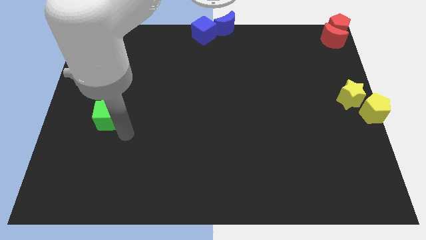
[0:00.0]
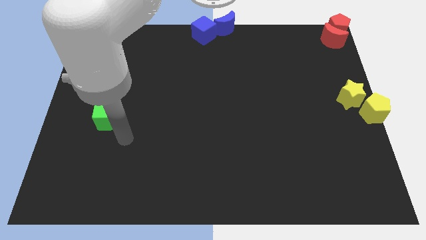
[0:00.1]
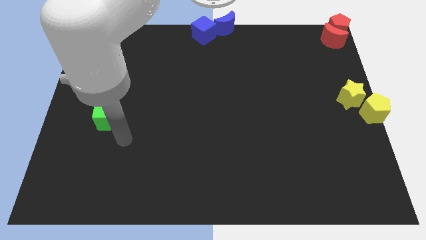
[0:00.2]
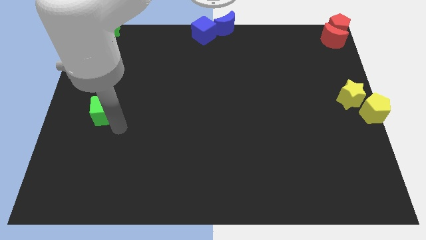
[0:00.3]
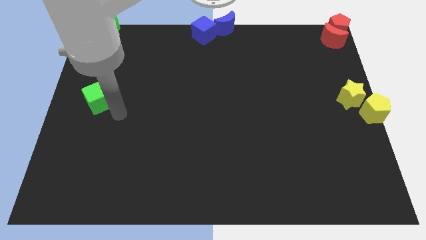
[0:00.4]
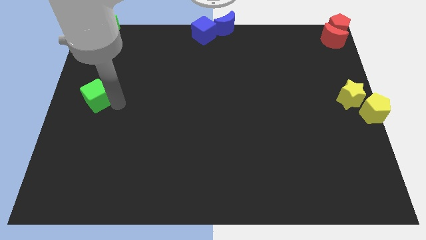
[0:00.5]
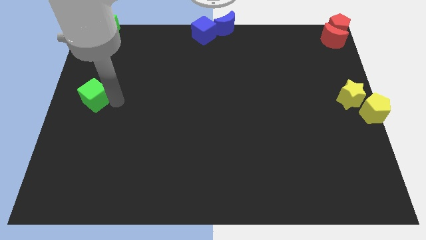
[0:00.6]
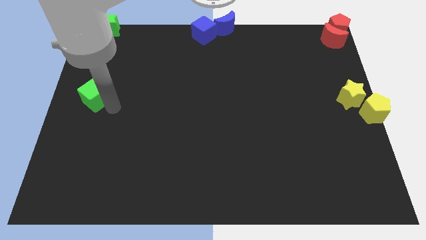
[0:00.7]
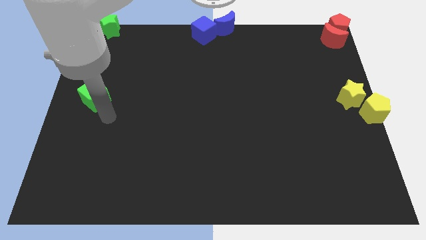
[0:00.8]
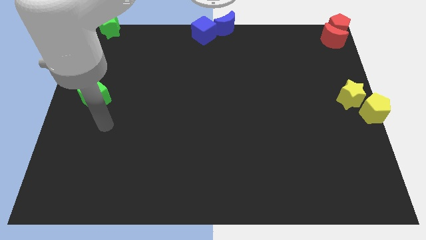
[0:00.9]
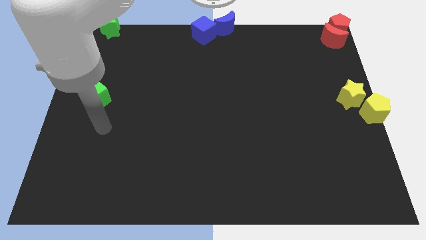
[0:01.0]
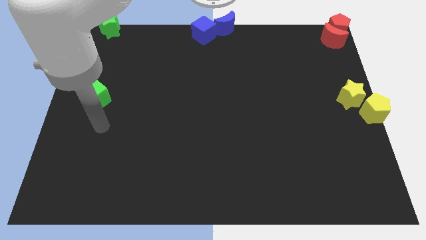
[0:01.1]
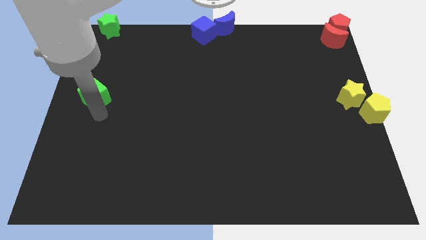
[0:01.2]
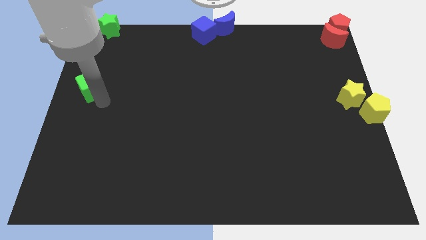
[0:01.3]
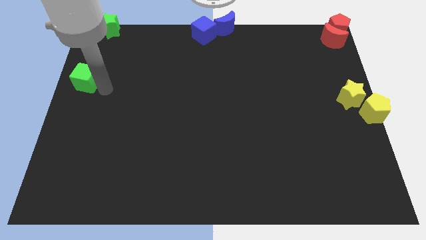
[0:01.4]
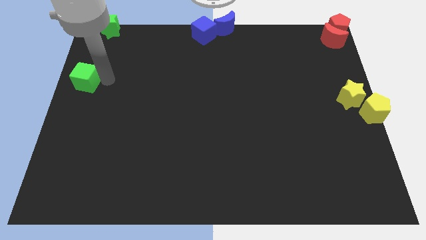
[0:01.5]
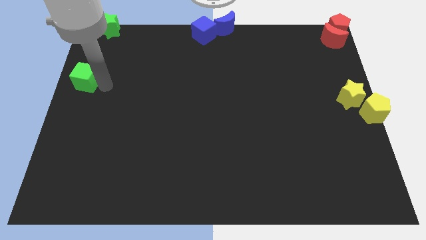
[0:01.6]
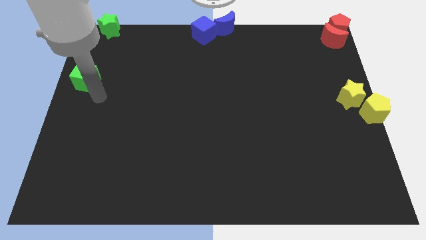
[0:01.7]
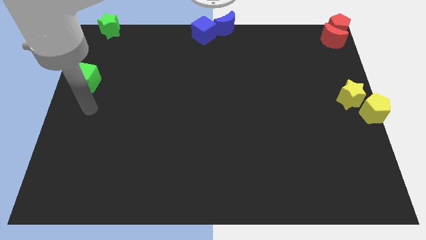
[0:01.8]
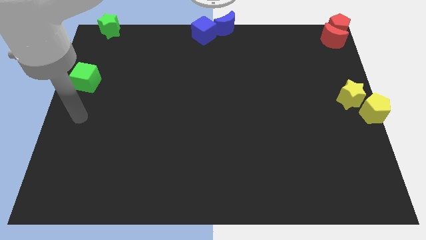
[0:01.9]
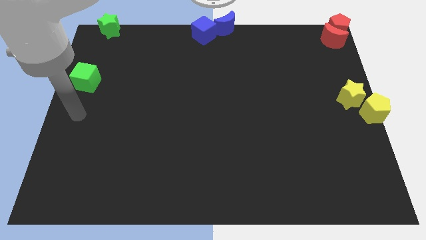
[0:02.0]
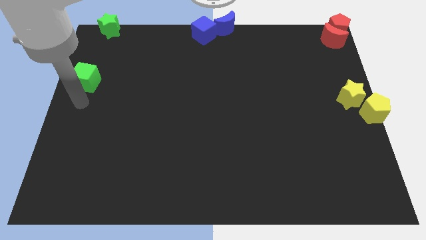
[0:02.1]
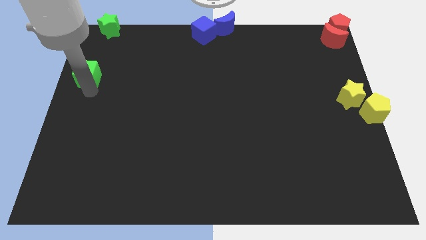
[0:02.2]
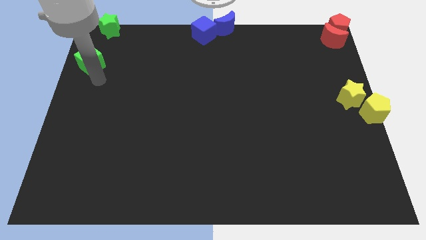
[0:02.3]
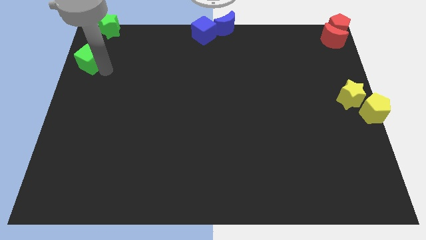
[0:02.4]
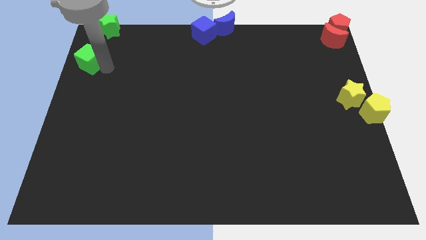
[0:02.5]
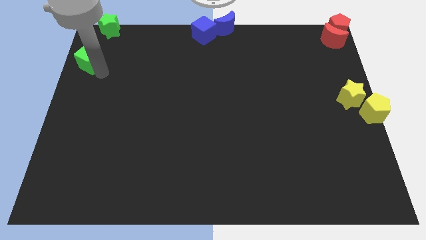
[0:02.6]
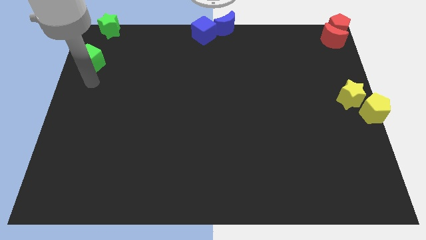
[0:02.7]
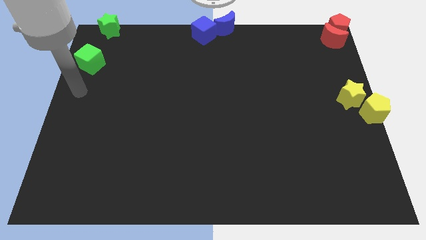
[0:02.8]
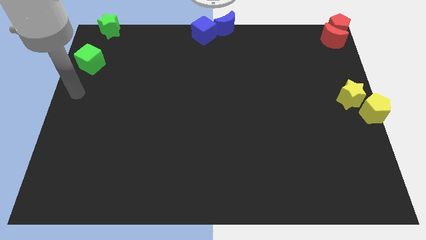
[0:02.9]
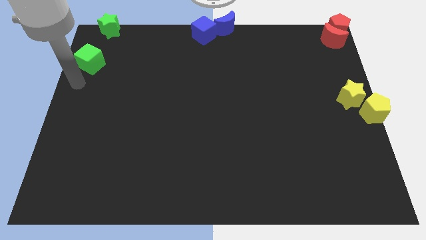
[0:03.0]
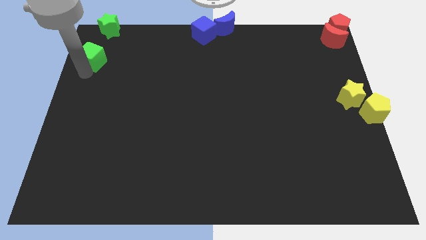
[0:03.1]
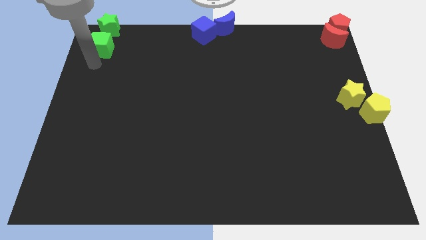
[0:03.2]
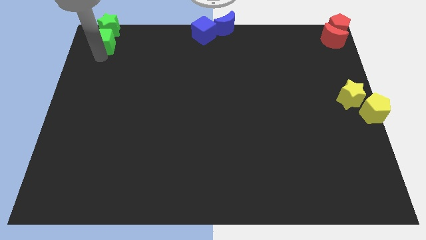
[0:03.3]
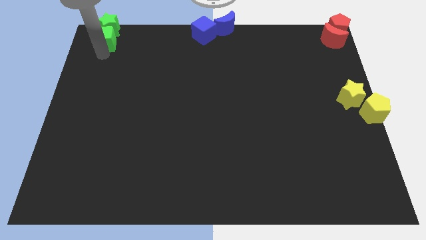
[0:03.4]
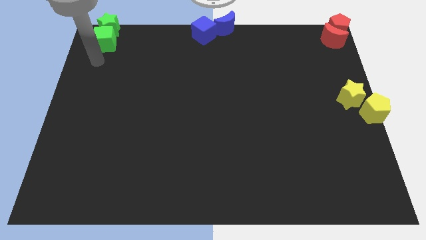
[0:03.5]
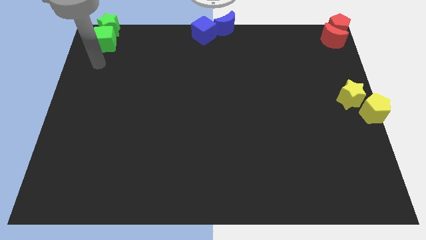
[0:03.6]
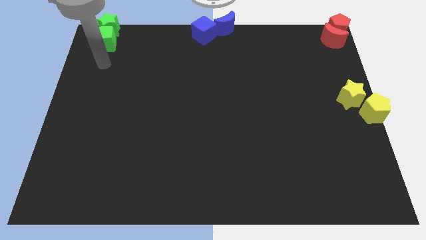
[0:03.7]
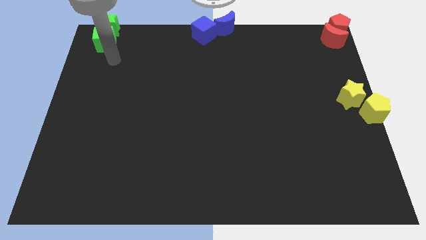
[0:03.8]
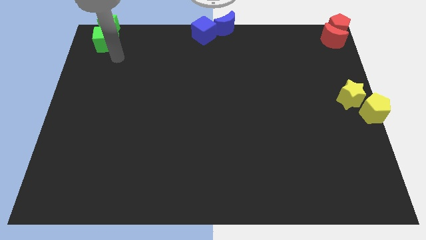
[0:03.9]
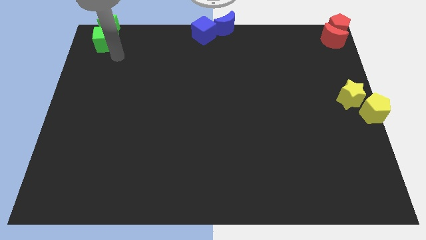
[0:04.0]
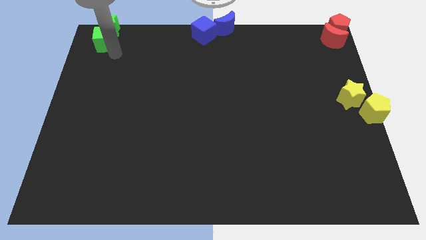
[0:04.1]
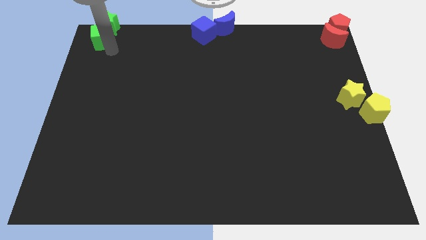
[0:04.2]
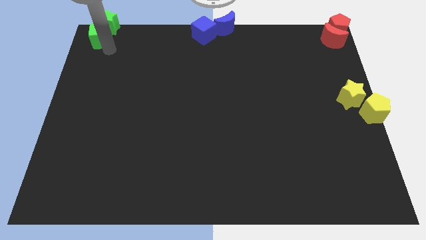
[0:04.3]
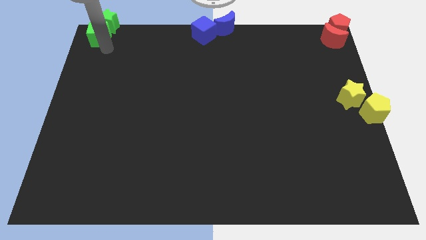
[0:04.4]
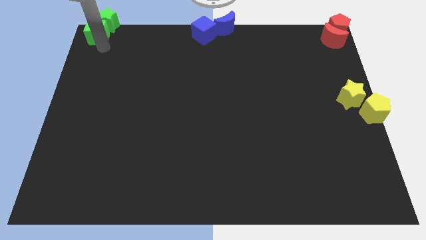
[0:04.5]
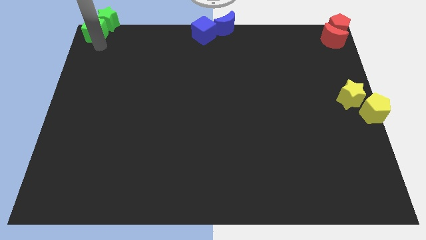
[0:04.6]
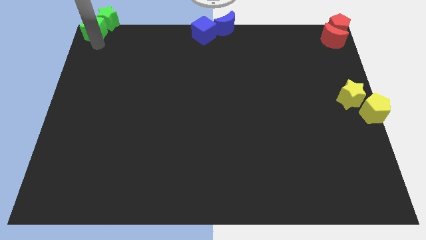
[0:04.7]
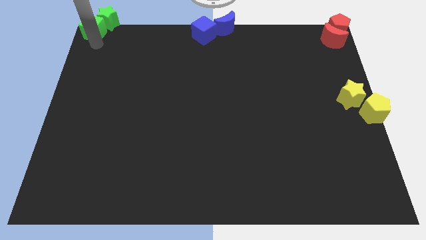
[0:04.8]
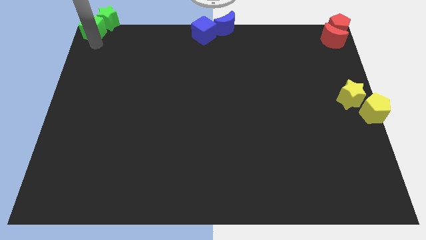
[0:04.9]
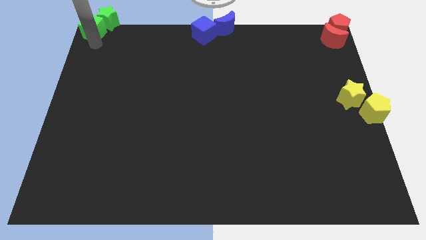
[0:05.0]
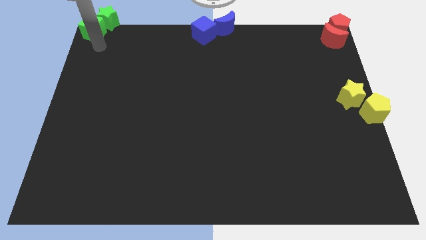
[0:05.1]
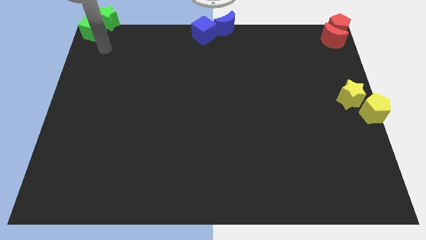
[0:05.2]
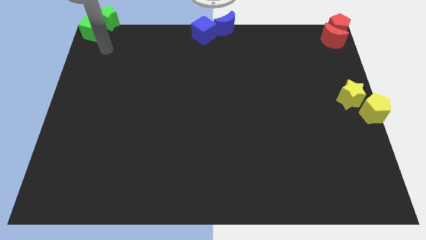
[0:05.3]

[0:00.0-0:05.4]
push green cube into the green star

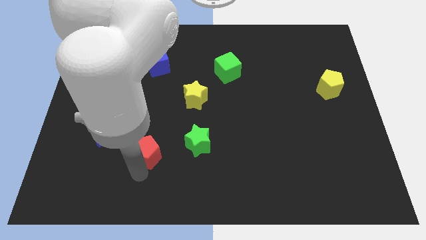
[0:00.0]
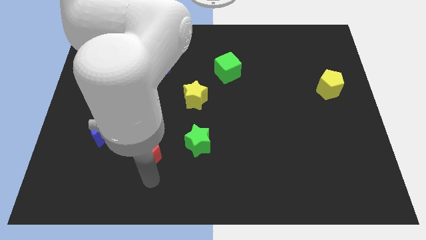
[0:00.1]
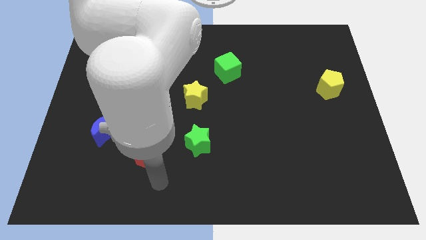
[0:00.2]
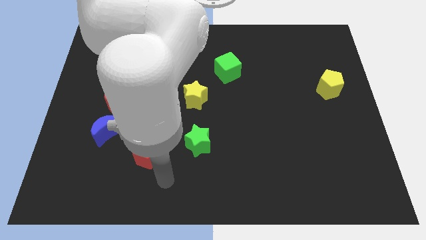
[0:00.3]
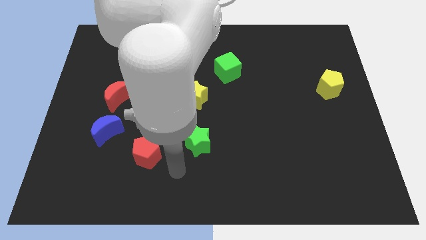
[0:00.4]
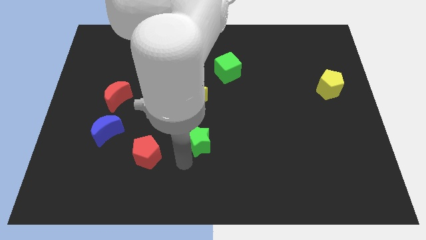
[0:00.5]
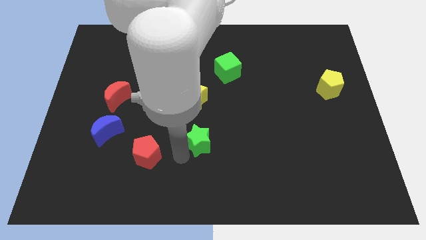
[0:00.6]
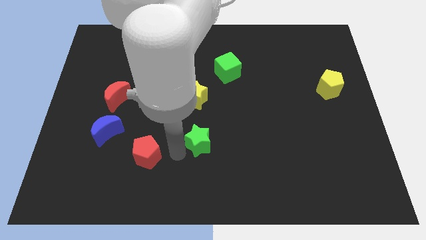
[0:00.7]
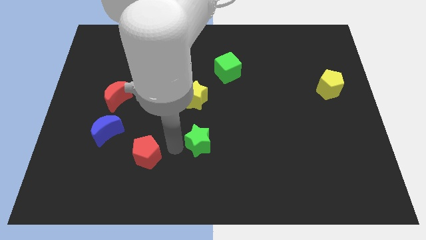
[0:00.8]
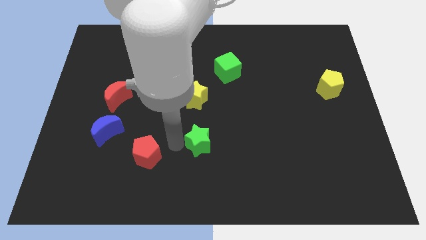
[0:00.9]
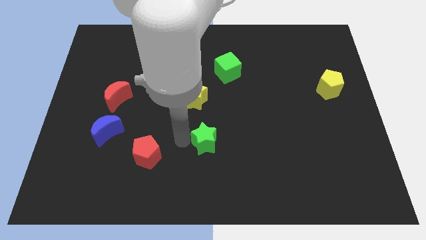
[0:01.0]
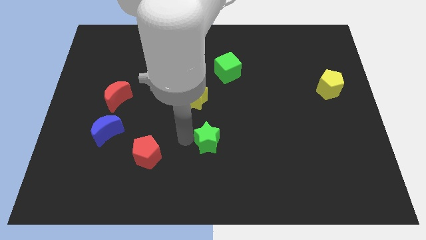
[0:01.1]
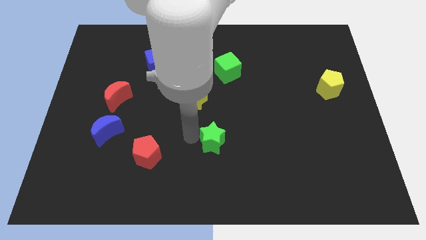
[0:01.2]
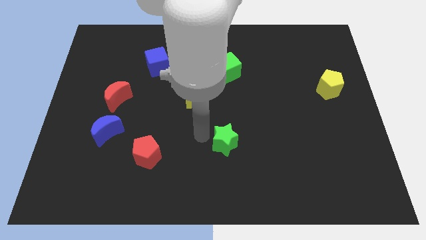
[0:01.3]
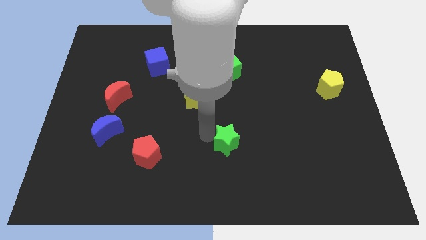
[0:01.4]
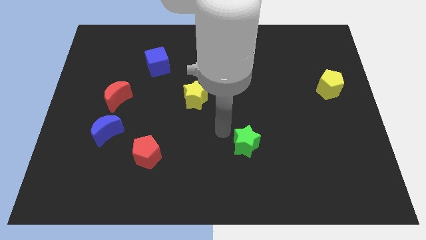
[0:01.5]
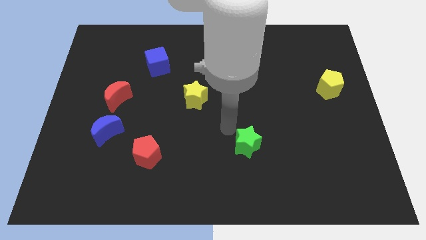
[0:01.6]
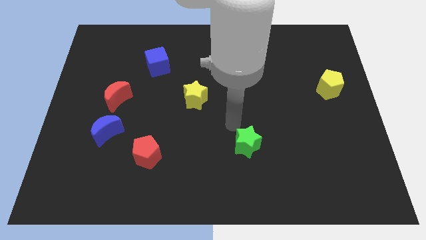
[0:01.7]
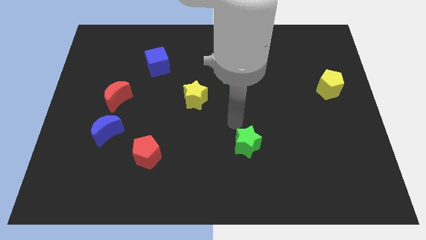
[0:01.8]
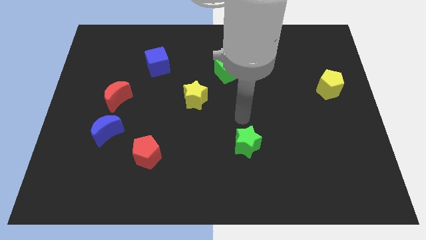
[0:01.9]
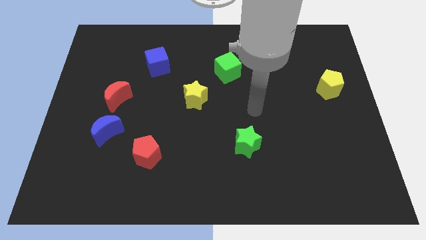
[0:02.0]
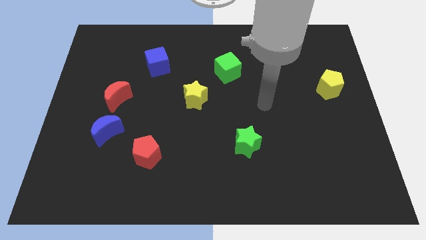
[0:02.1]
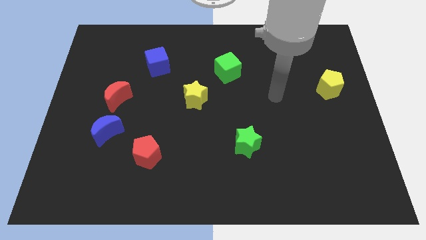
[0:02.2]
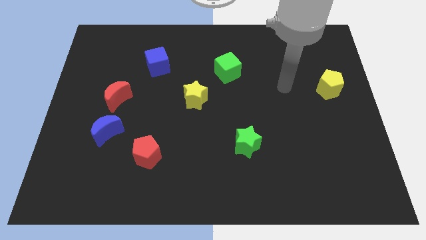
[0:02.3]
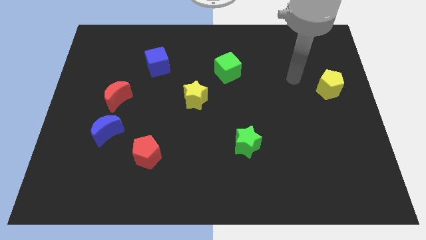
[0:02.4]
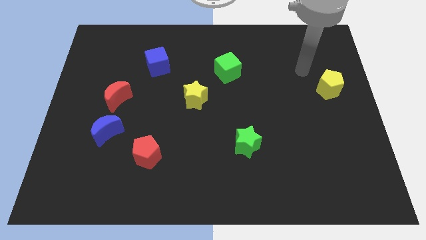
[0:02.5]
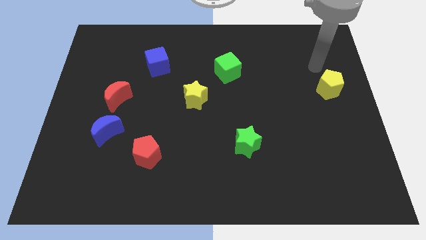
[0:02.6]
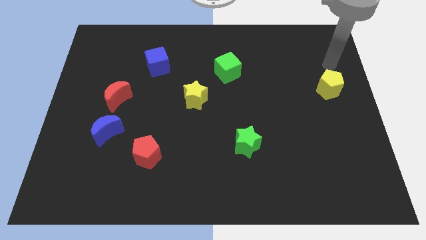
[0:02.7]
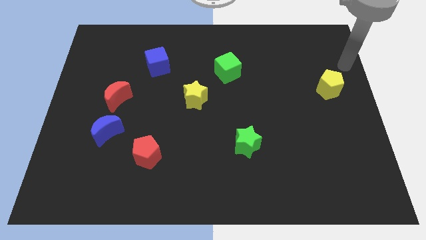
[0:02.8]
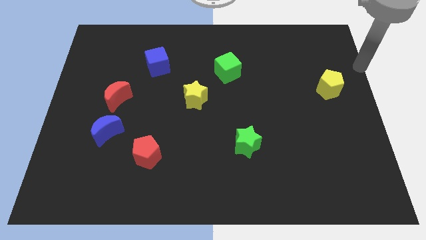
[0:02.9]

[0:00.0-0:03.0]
move the green star towards the right side of the board

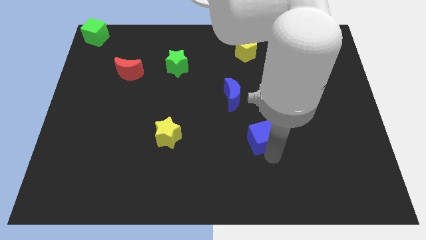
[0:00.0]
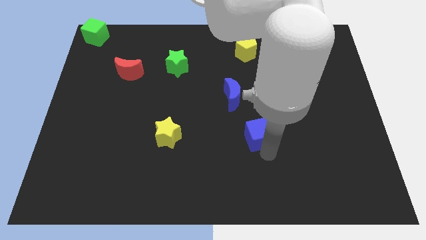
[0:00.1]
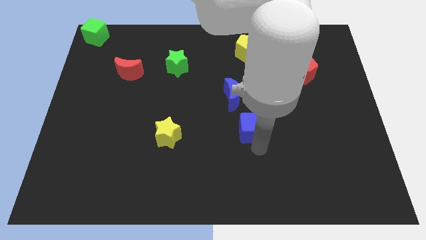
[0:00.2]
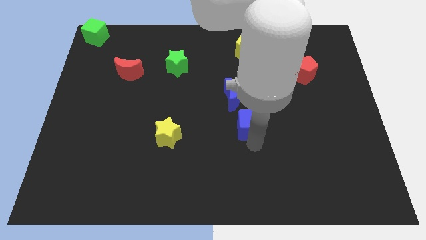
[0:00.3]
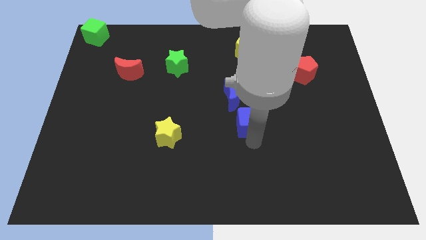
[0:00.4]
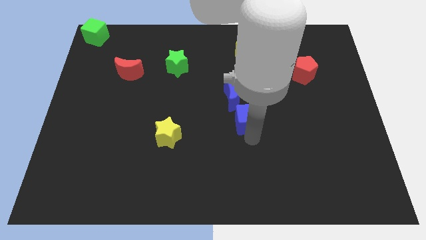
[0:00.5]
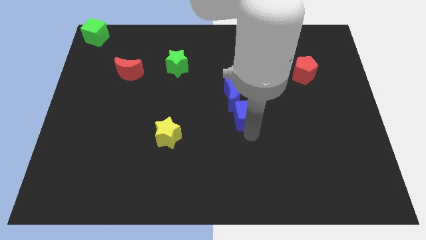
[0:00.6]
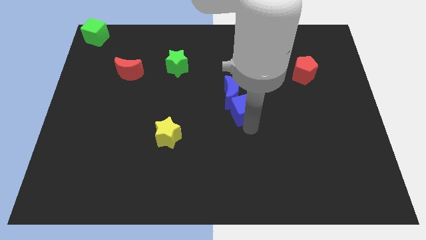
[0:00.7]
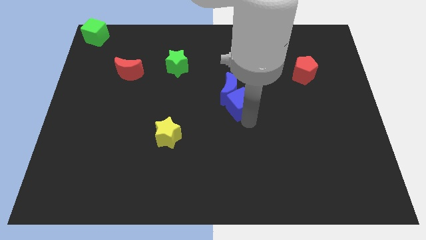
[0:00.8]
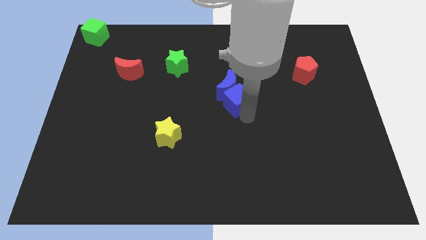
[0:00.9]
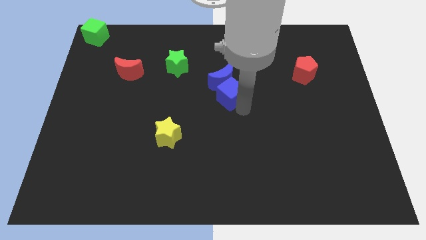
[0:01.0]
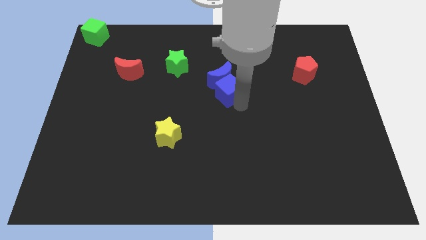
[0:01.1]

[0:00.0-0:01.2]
slide blue cube into blue moon
